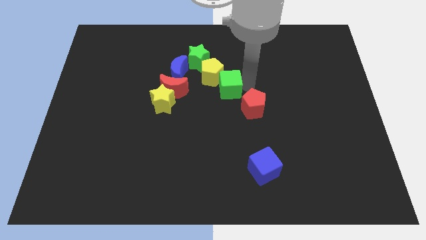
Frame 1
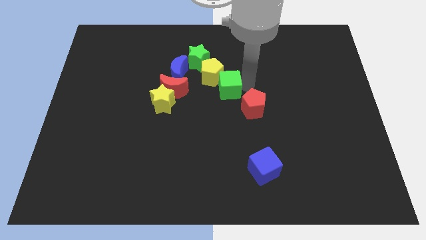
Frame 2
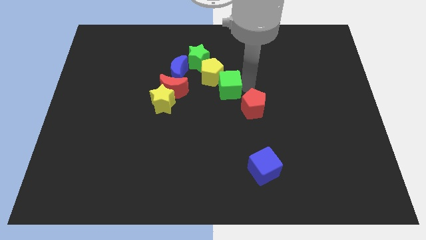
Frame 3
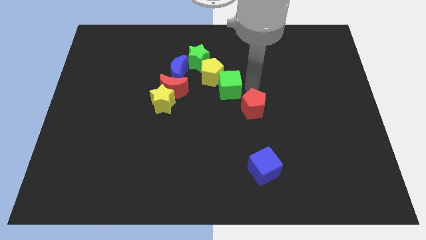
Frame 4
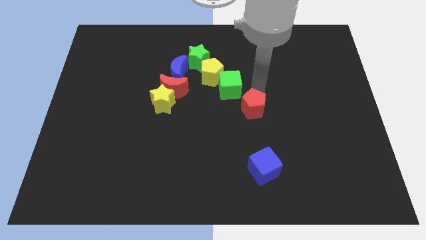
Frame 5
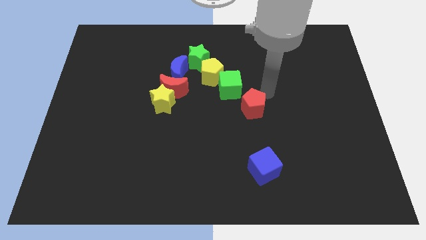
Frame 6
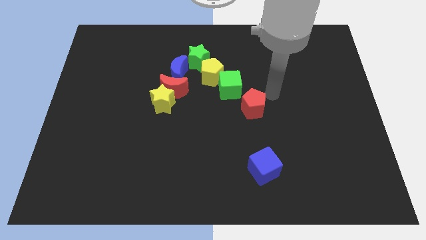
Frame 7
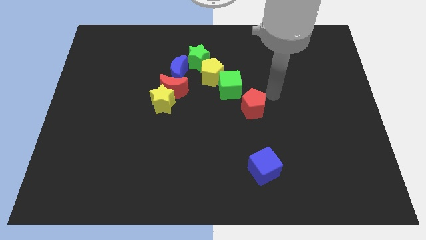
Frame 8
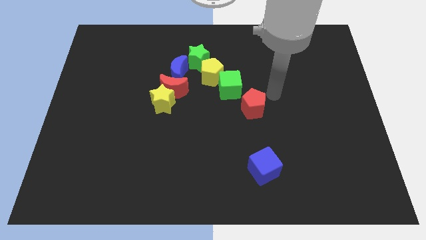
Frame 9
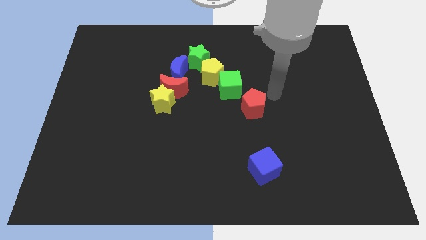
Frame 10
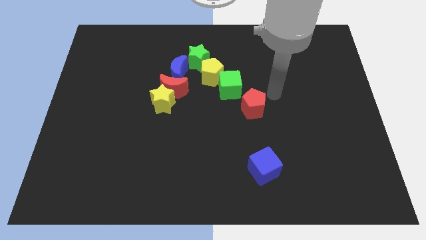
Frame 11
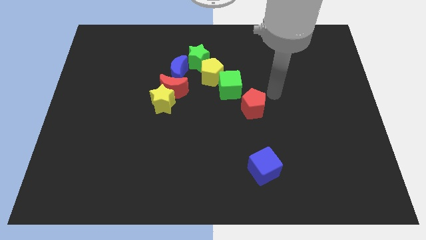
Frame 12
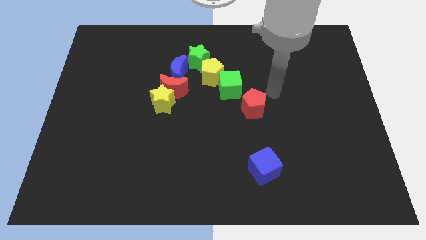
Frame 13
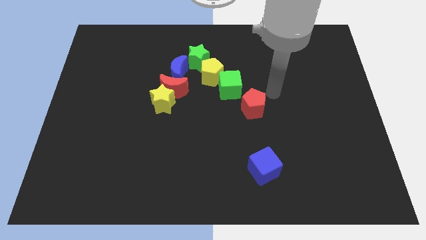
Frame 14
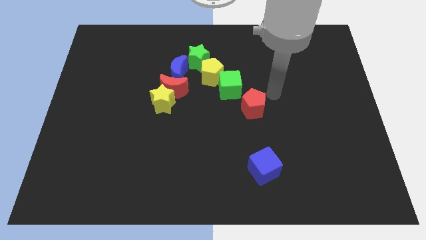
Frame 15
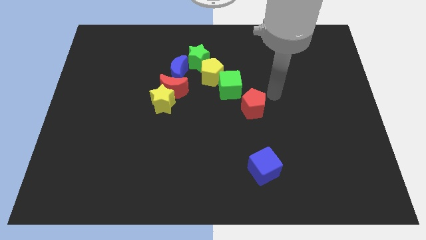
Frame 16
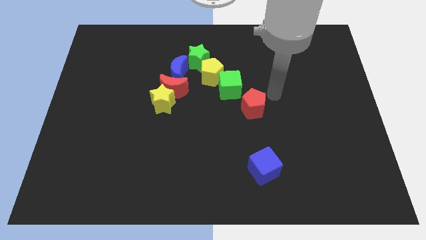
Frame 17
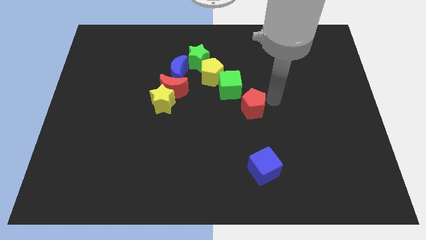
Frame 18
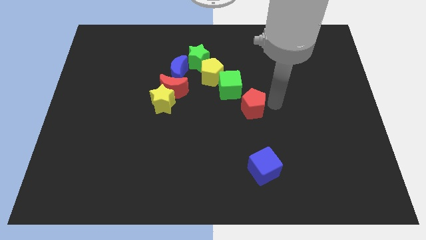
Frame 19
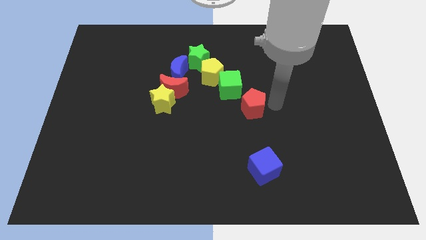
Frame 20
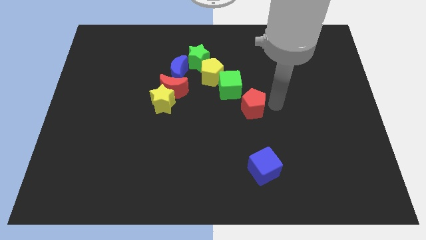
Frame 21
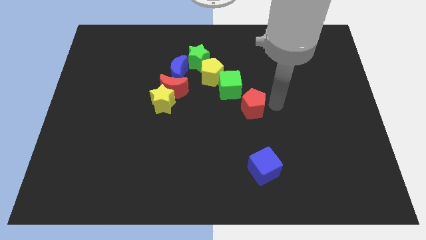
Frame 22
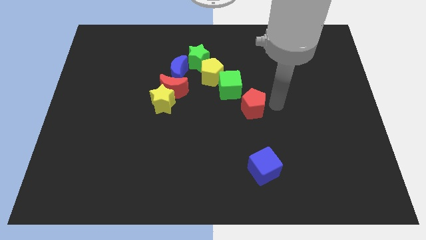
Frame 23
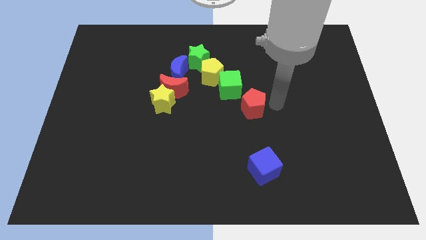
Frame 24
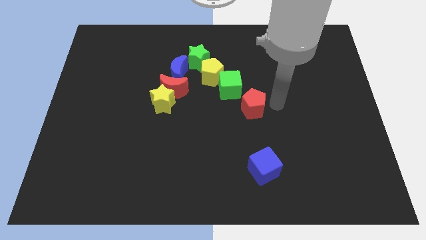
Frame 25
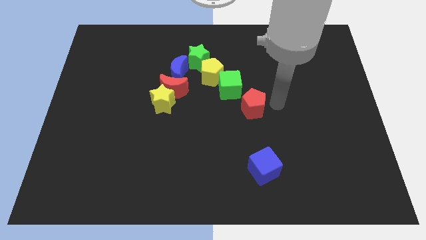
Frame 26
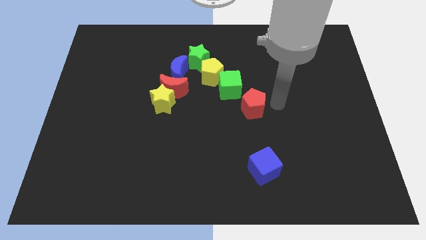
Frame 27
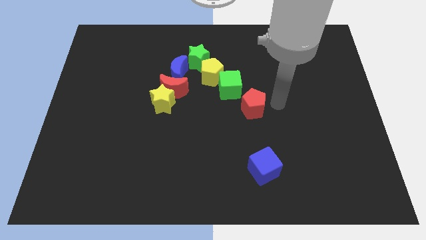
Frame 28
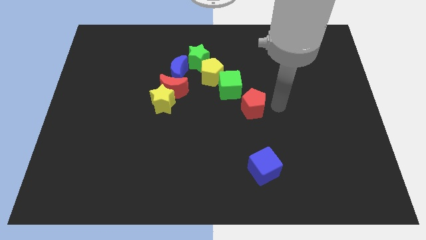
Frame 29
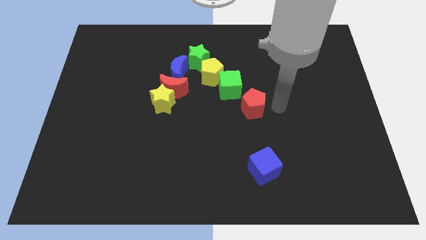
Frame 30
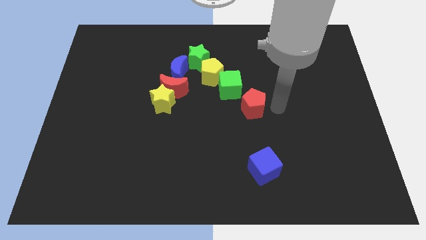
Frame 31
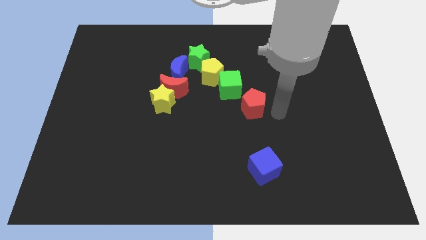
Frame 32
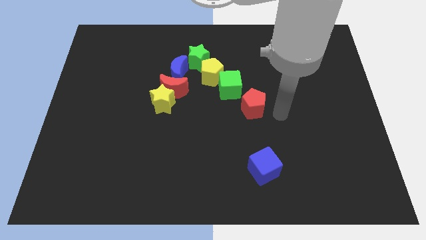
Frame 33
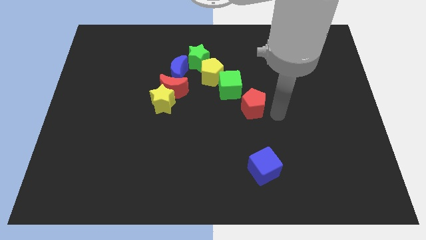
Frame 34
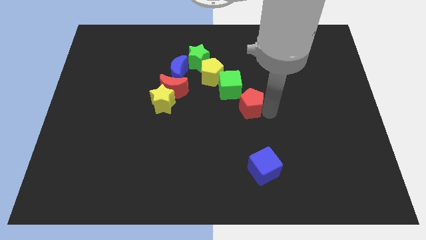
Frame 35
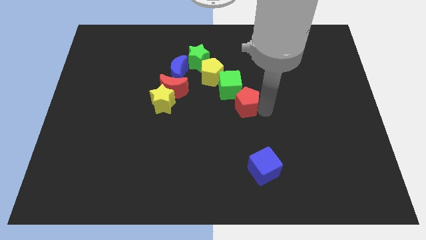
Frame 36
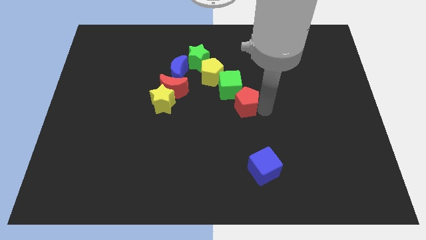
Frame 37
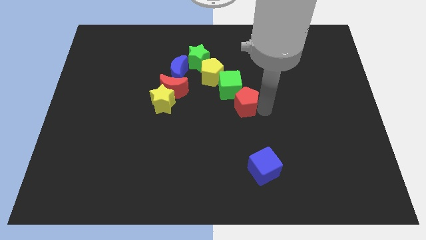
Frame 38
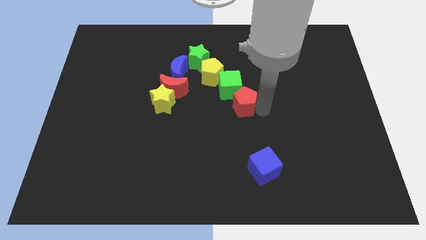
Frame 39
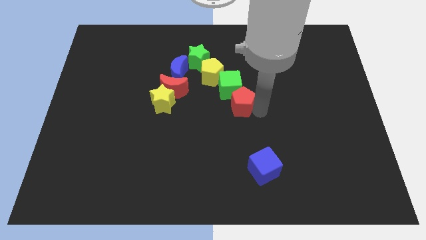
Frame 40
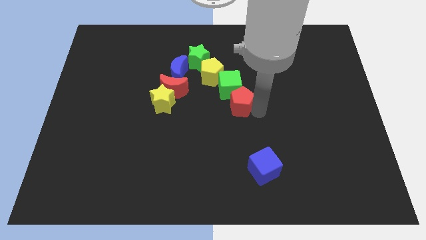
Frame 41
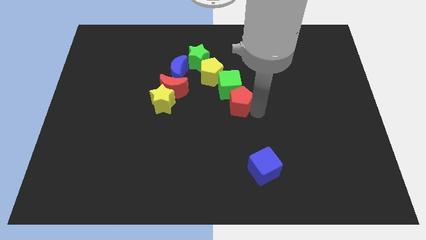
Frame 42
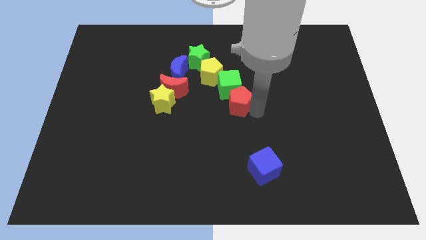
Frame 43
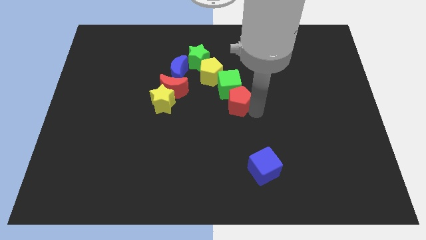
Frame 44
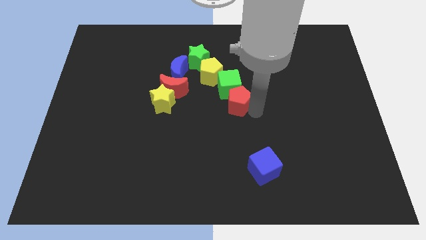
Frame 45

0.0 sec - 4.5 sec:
place the red pentagon to the right bottom side of the green star

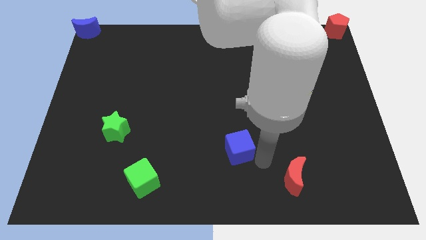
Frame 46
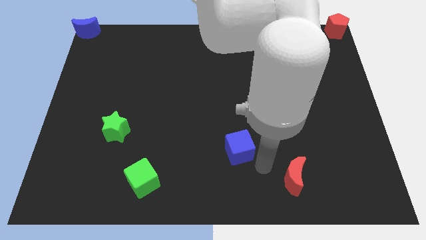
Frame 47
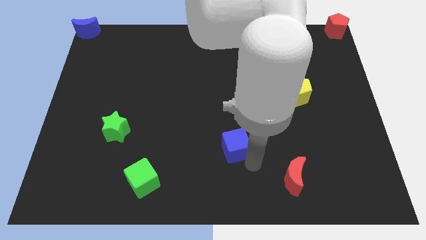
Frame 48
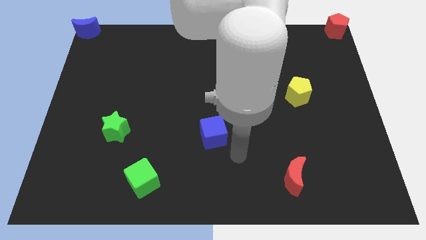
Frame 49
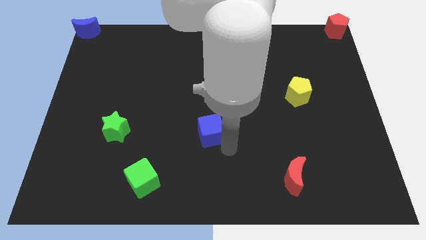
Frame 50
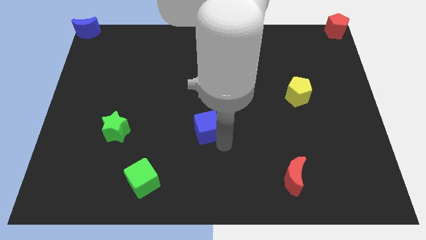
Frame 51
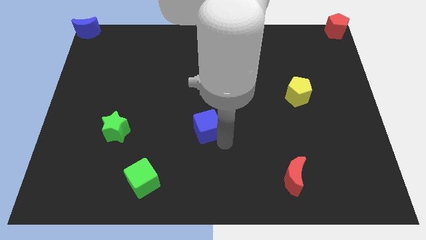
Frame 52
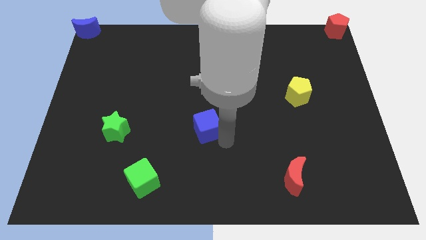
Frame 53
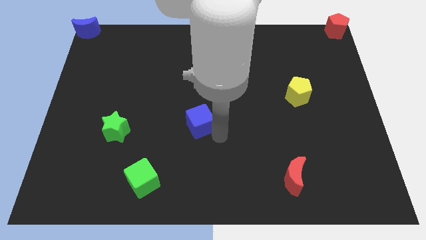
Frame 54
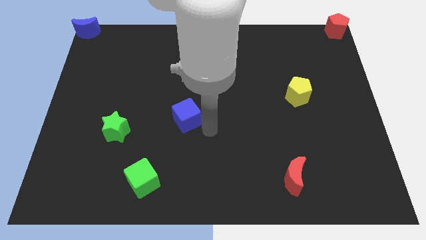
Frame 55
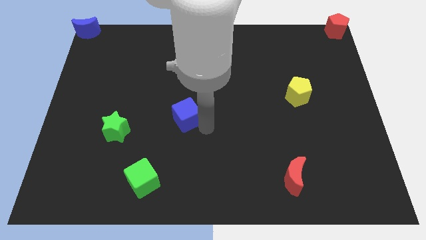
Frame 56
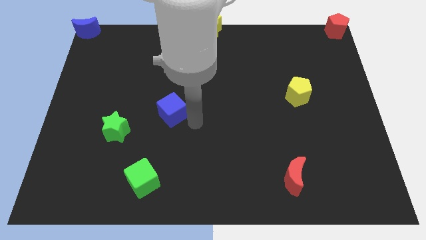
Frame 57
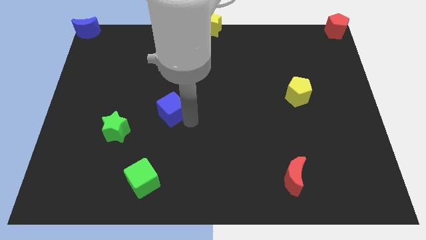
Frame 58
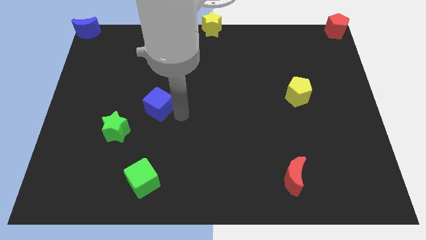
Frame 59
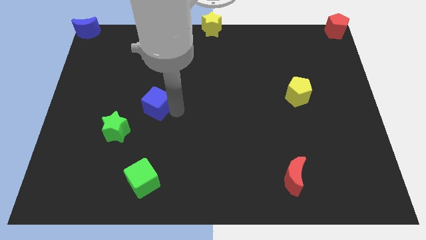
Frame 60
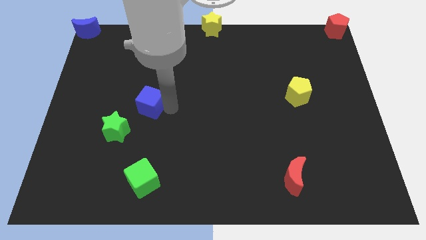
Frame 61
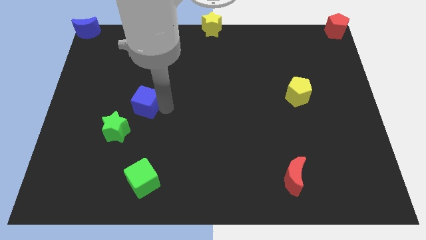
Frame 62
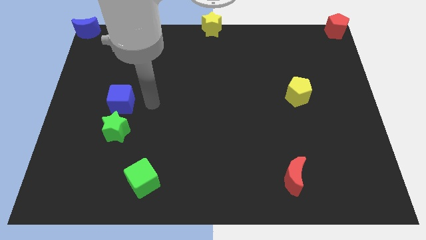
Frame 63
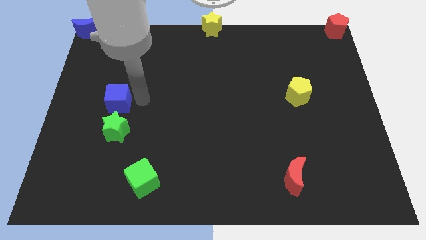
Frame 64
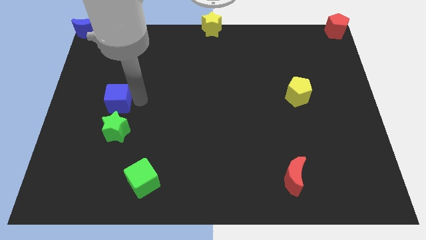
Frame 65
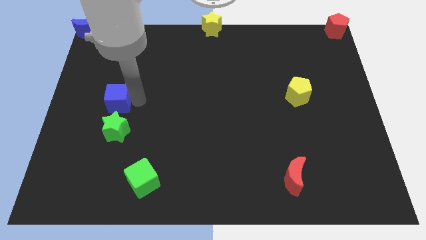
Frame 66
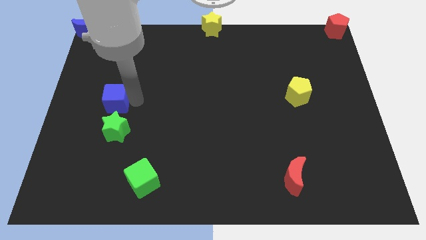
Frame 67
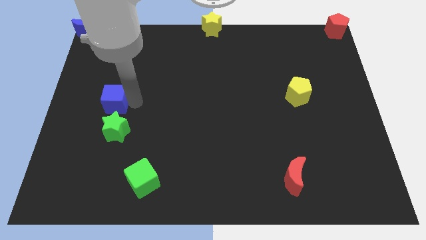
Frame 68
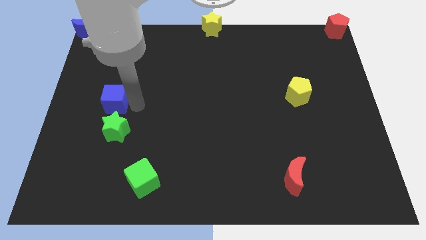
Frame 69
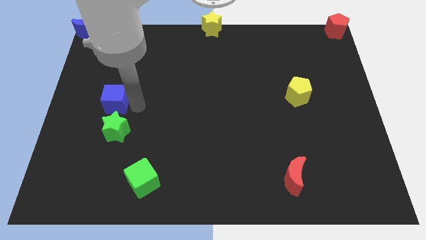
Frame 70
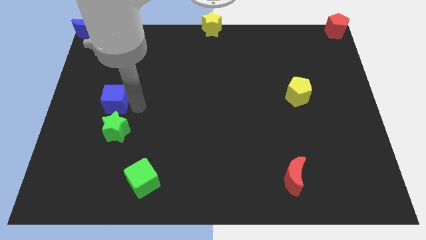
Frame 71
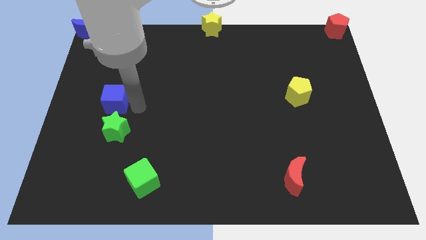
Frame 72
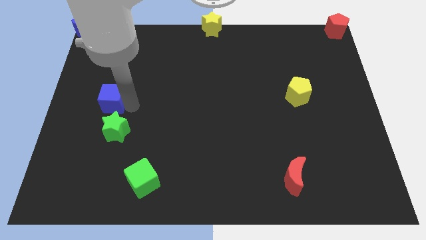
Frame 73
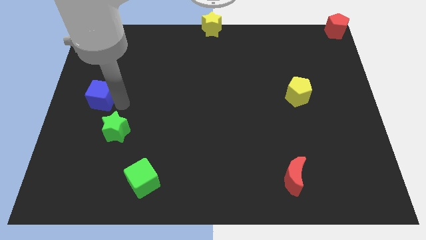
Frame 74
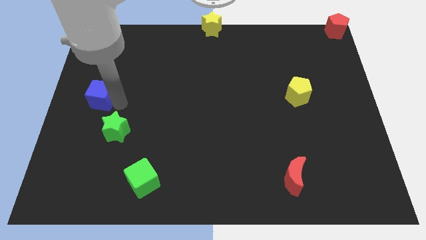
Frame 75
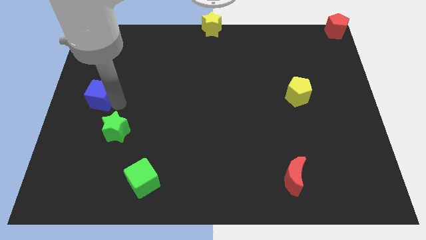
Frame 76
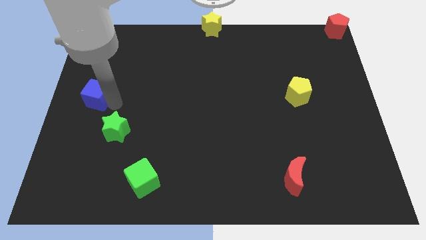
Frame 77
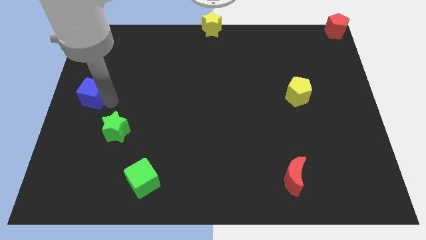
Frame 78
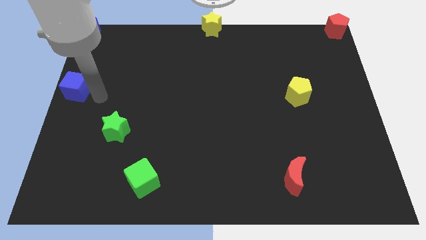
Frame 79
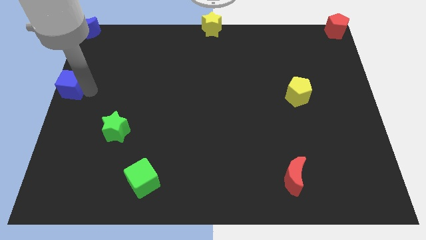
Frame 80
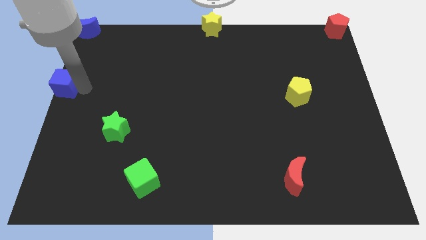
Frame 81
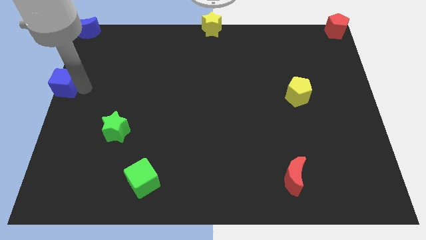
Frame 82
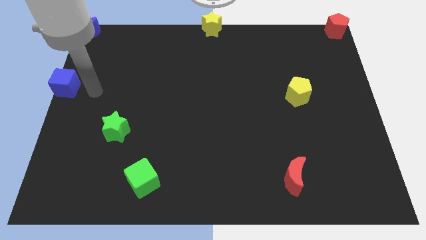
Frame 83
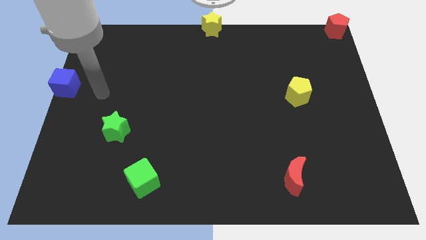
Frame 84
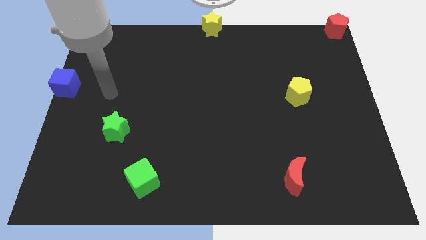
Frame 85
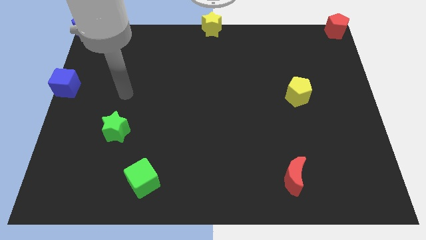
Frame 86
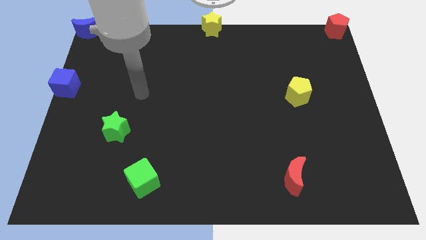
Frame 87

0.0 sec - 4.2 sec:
slide blue cube at the center left

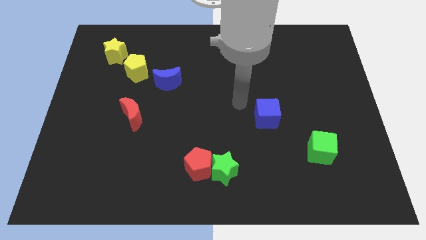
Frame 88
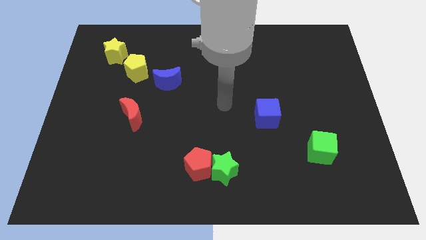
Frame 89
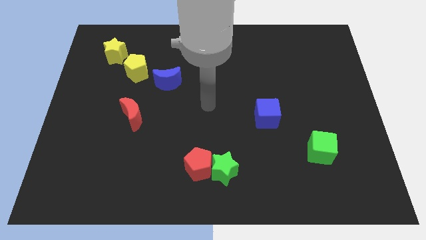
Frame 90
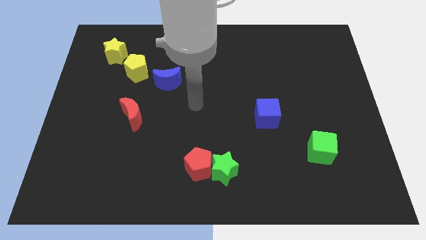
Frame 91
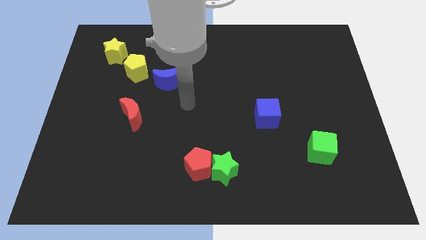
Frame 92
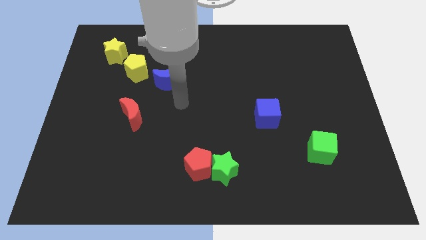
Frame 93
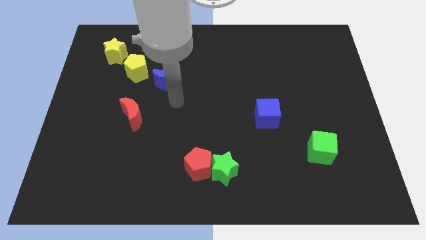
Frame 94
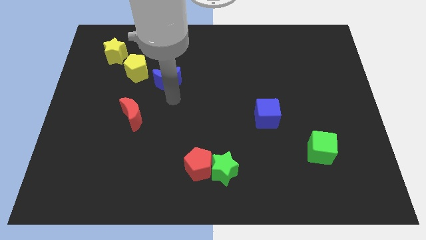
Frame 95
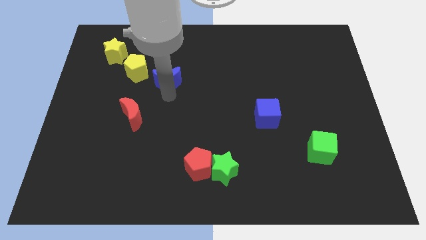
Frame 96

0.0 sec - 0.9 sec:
move the arm to the bottom of the blue crescent
